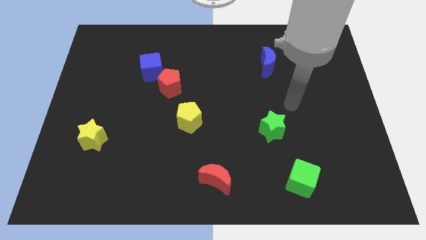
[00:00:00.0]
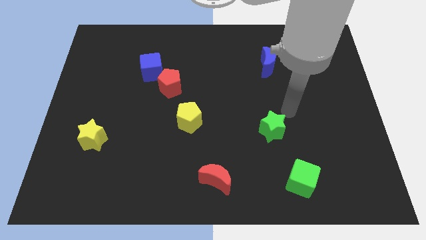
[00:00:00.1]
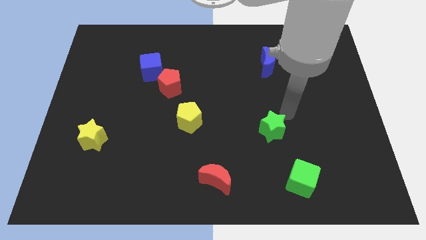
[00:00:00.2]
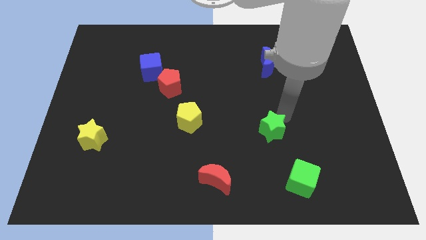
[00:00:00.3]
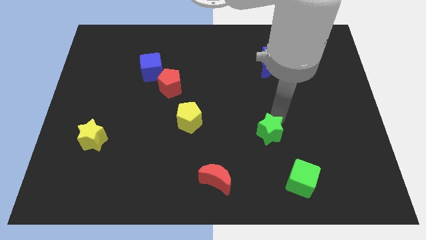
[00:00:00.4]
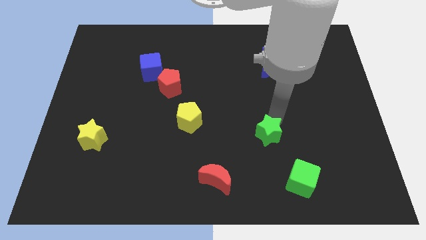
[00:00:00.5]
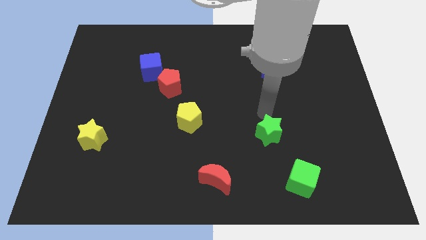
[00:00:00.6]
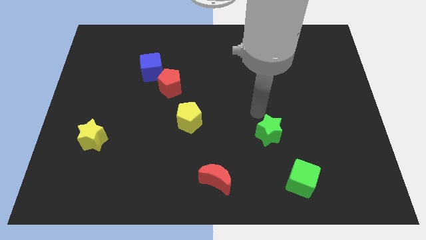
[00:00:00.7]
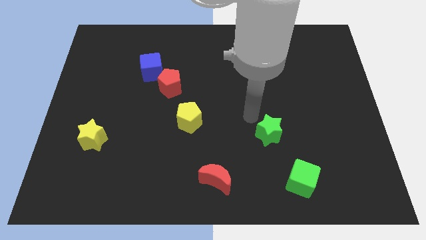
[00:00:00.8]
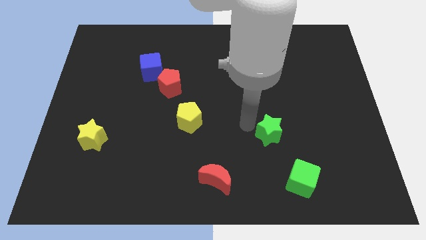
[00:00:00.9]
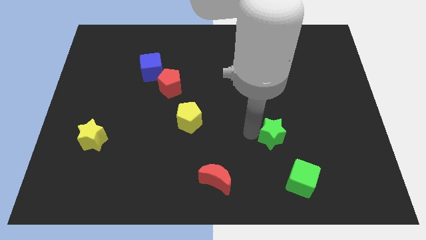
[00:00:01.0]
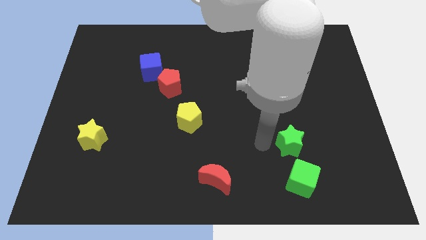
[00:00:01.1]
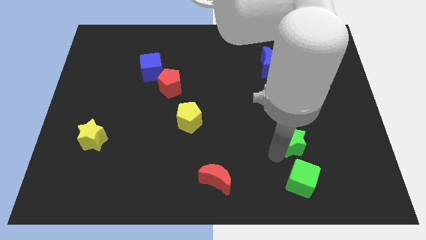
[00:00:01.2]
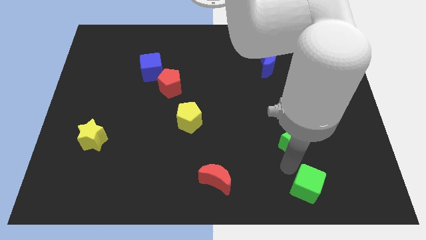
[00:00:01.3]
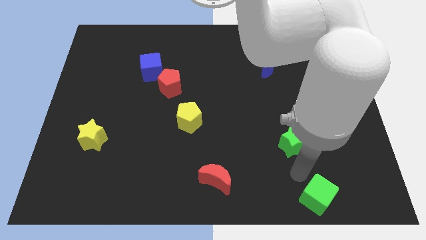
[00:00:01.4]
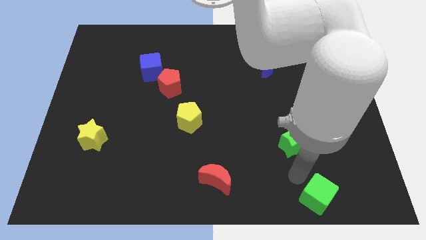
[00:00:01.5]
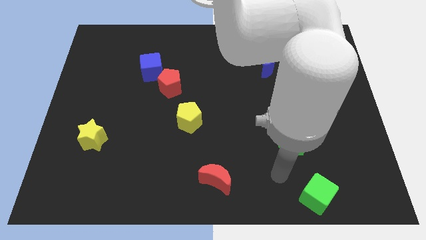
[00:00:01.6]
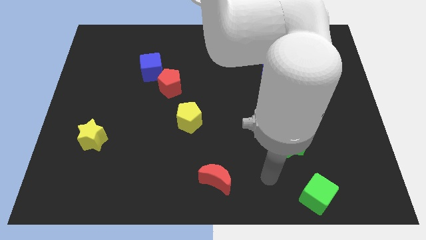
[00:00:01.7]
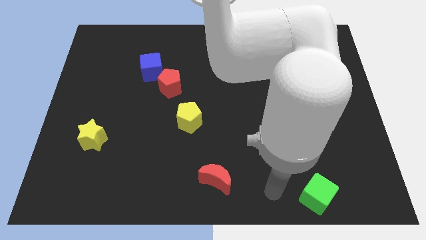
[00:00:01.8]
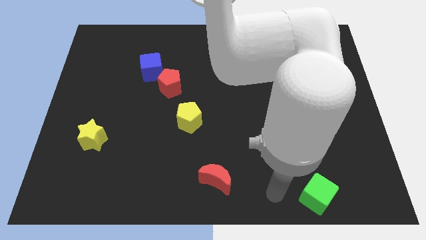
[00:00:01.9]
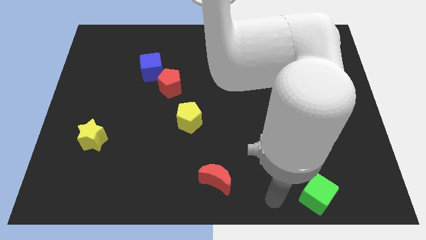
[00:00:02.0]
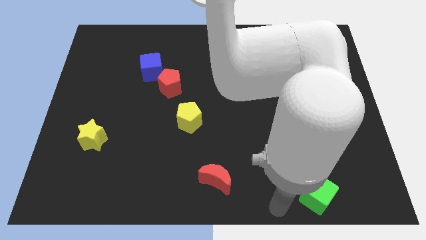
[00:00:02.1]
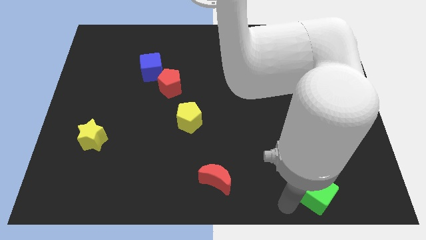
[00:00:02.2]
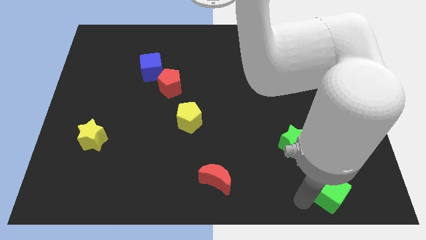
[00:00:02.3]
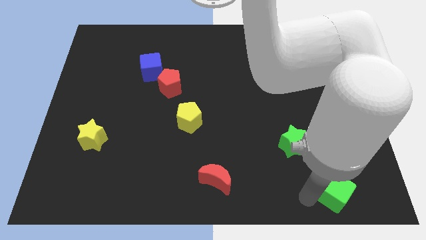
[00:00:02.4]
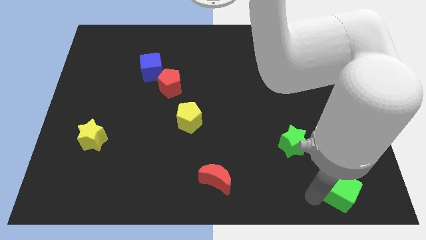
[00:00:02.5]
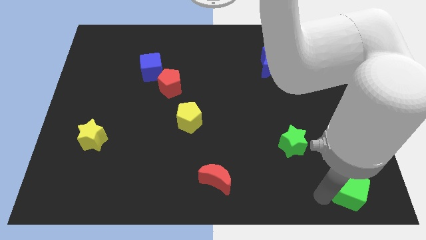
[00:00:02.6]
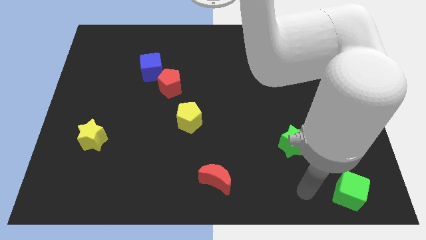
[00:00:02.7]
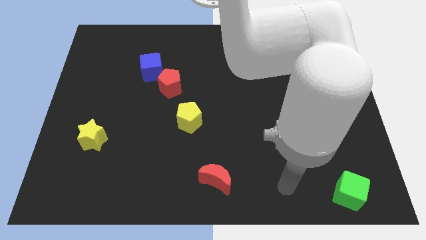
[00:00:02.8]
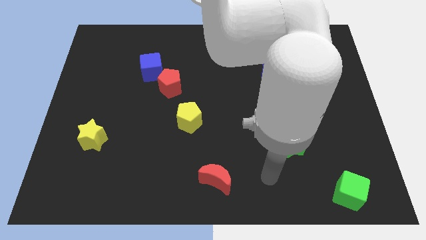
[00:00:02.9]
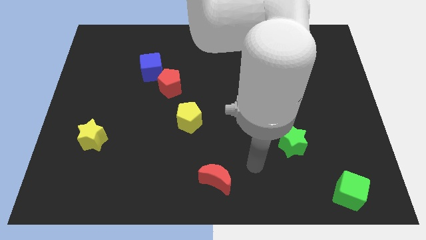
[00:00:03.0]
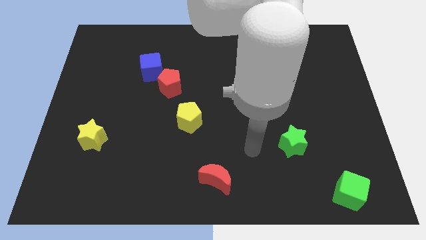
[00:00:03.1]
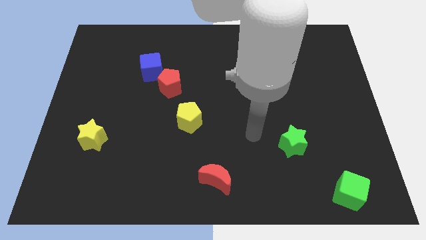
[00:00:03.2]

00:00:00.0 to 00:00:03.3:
place the green cube diagonal to the green star

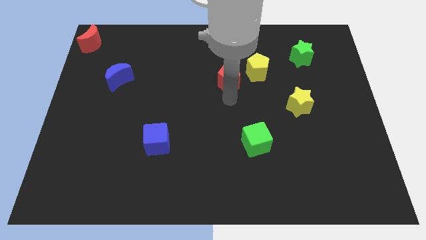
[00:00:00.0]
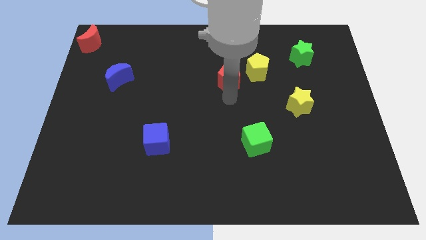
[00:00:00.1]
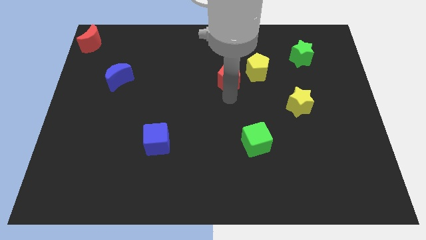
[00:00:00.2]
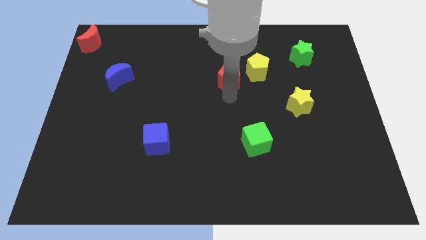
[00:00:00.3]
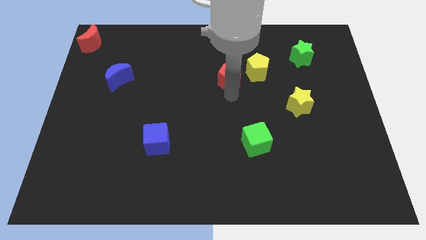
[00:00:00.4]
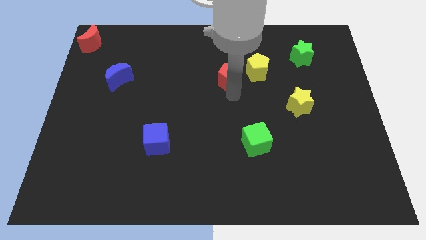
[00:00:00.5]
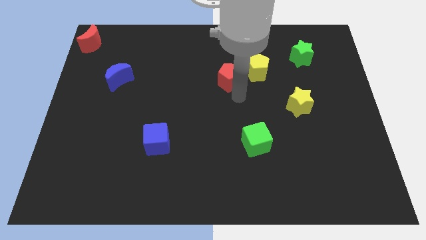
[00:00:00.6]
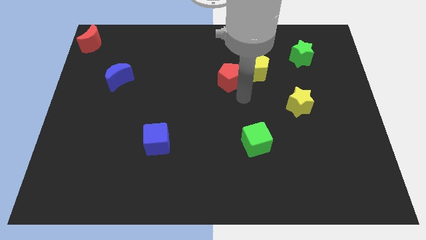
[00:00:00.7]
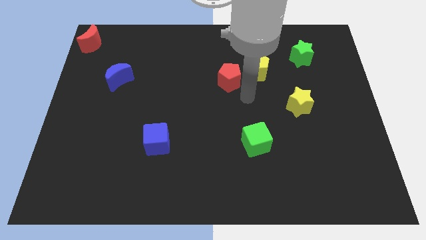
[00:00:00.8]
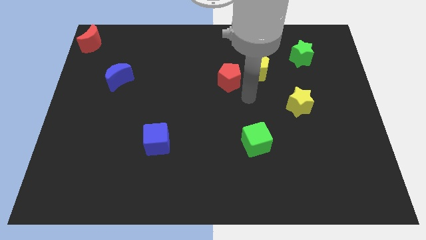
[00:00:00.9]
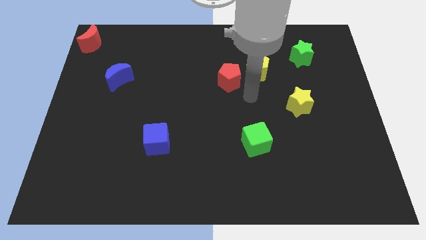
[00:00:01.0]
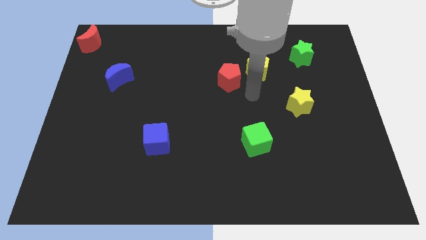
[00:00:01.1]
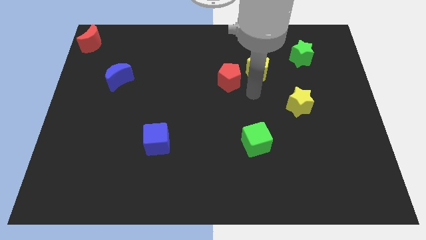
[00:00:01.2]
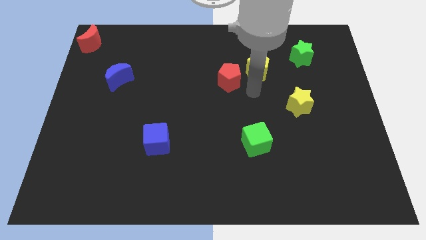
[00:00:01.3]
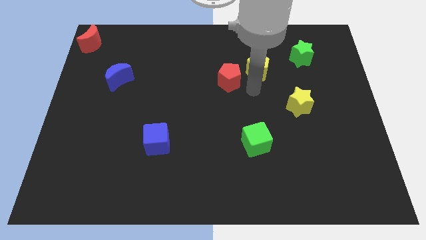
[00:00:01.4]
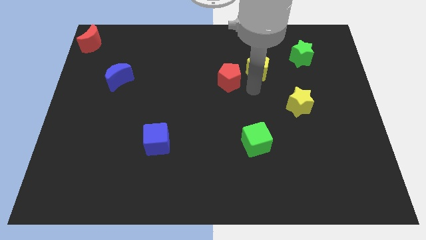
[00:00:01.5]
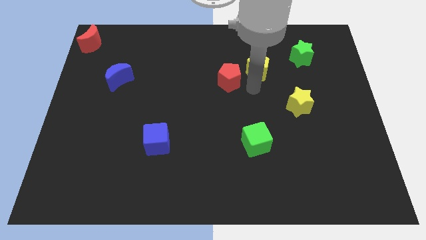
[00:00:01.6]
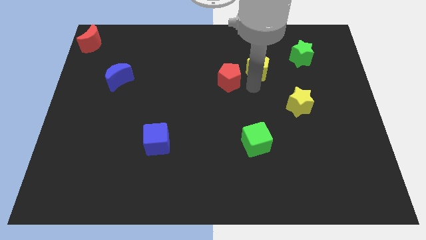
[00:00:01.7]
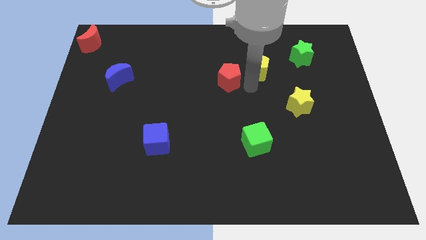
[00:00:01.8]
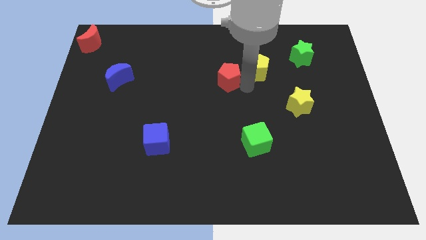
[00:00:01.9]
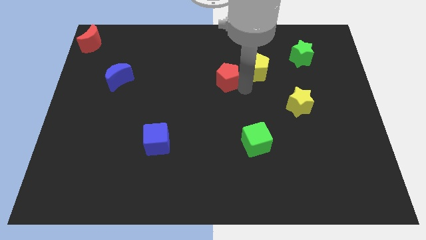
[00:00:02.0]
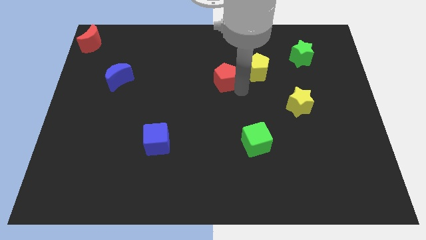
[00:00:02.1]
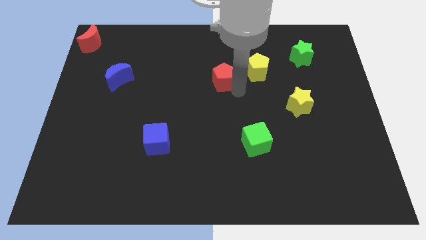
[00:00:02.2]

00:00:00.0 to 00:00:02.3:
place the red pentagon to the left side of the yellow pentagon

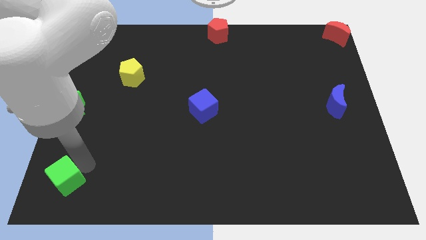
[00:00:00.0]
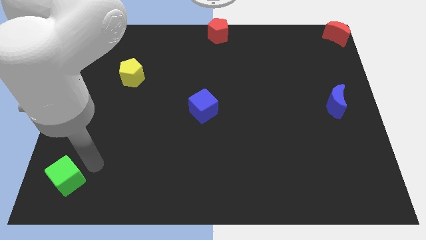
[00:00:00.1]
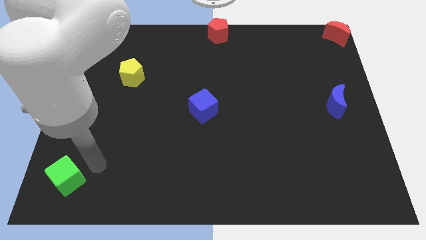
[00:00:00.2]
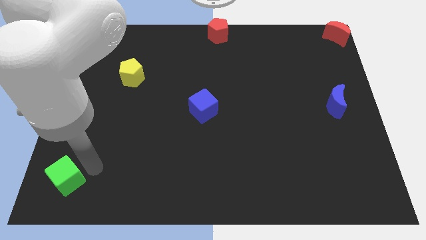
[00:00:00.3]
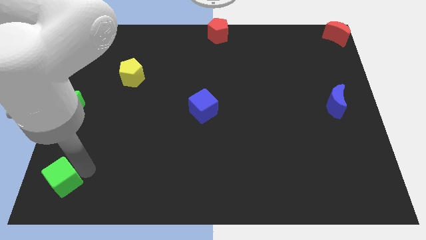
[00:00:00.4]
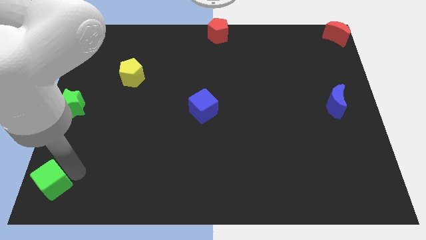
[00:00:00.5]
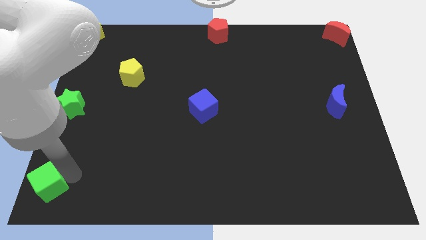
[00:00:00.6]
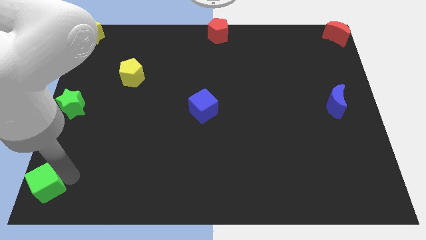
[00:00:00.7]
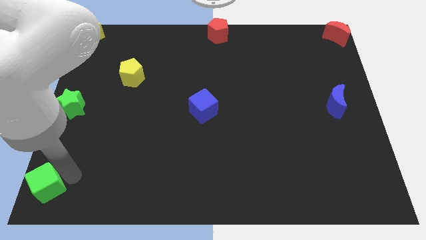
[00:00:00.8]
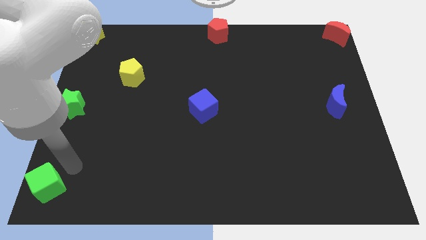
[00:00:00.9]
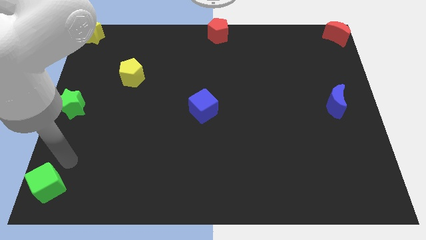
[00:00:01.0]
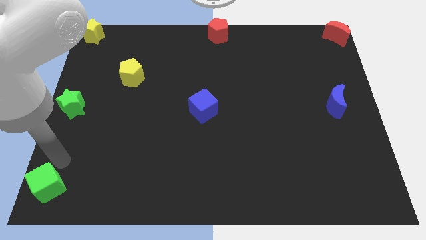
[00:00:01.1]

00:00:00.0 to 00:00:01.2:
push the green cube towards the bottom left corner of the board

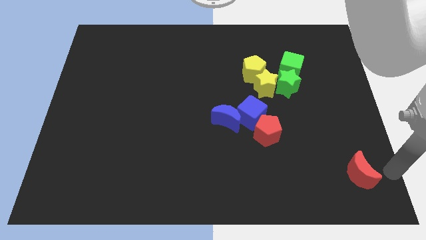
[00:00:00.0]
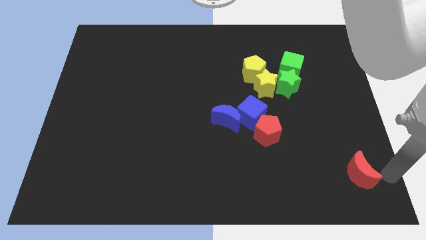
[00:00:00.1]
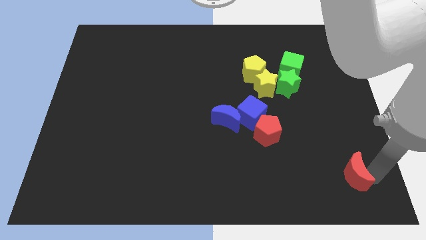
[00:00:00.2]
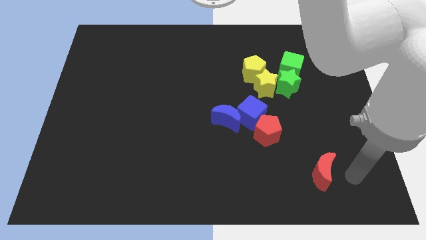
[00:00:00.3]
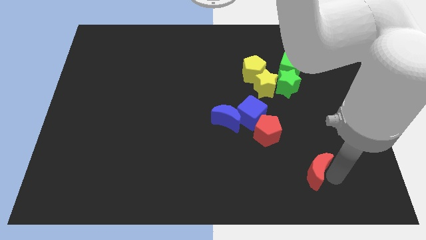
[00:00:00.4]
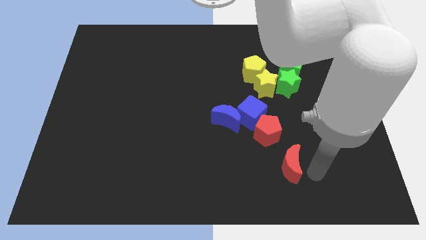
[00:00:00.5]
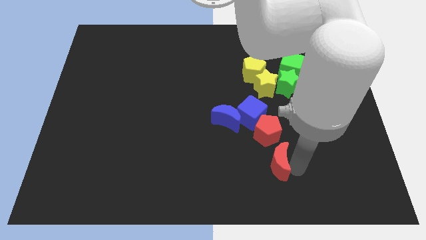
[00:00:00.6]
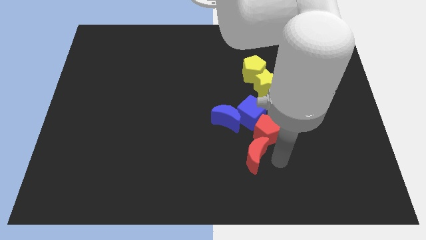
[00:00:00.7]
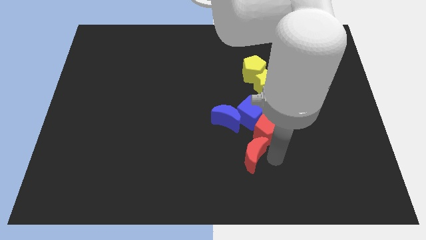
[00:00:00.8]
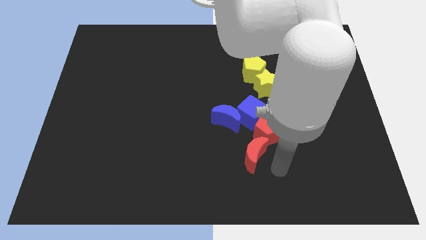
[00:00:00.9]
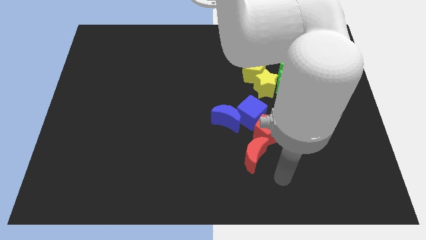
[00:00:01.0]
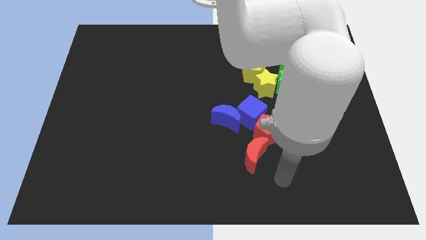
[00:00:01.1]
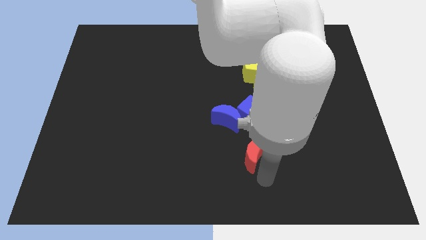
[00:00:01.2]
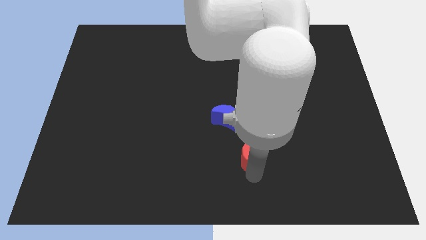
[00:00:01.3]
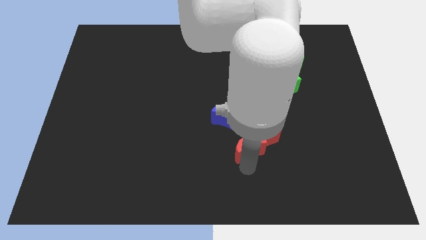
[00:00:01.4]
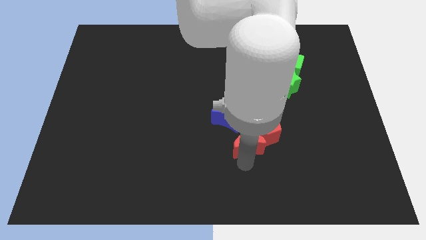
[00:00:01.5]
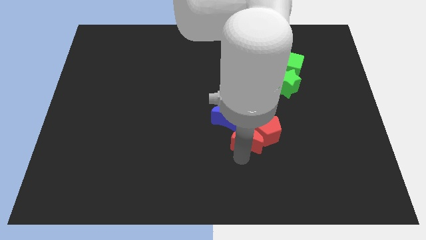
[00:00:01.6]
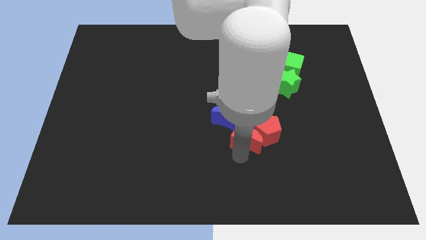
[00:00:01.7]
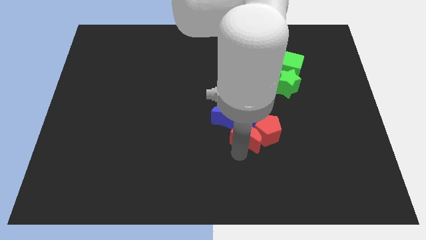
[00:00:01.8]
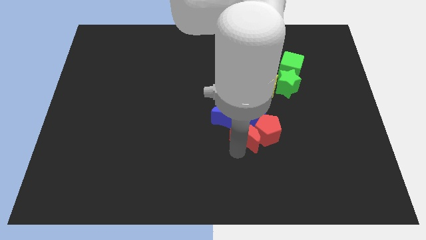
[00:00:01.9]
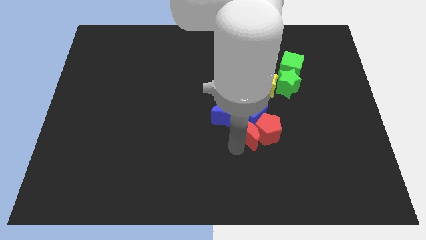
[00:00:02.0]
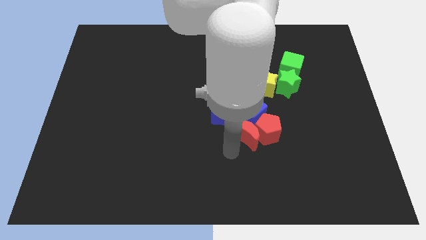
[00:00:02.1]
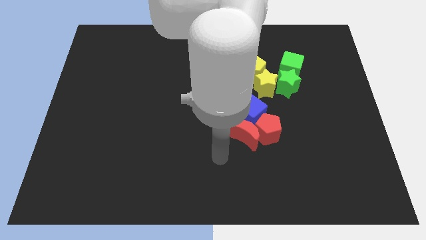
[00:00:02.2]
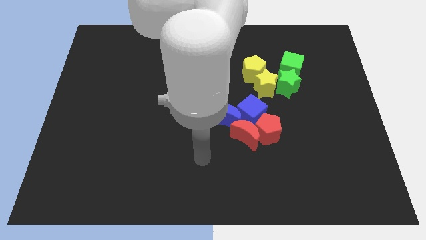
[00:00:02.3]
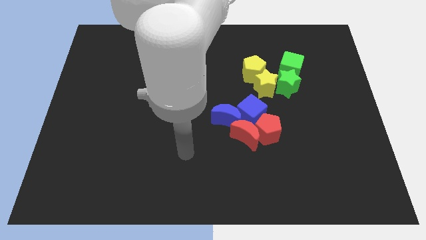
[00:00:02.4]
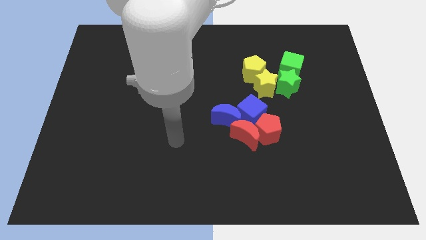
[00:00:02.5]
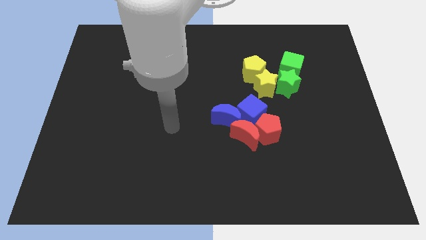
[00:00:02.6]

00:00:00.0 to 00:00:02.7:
move the red moon into the blue moon and the red pentagon
